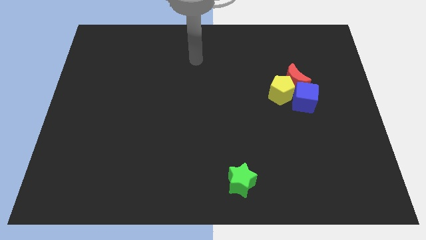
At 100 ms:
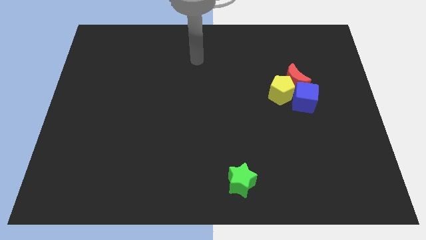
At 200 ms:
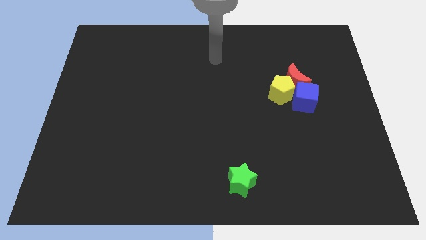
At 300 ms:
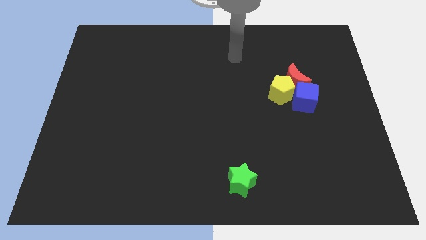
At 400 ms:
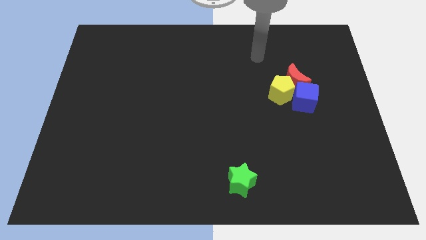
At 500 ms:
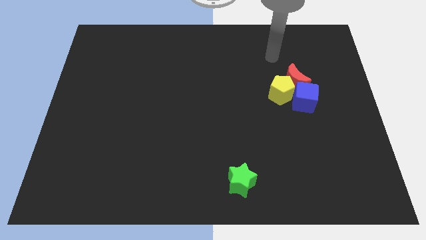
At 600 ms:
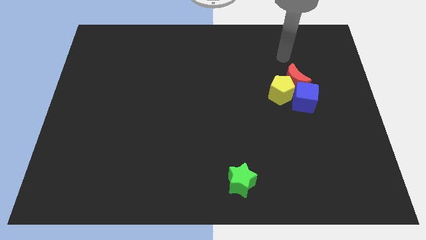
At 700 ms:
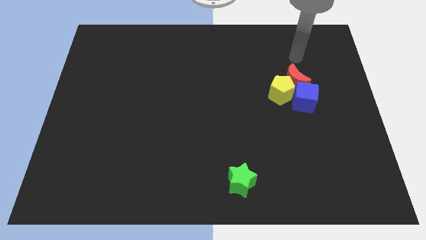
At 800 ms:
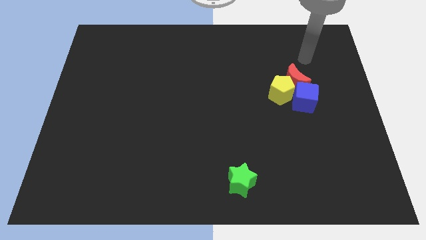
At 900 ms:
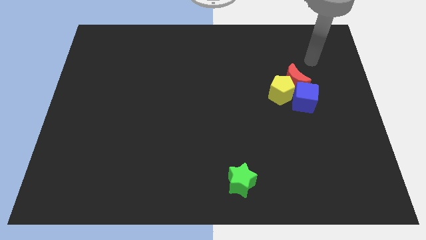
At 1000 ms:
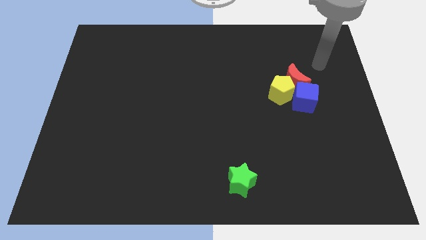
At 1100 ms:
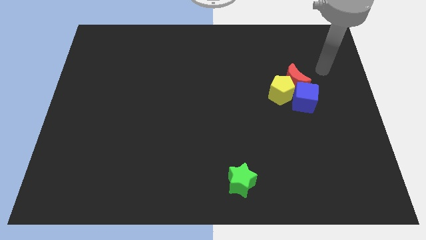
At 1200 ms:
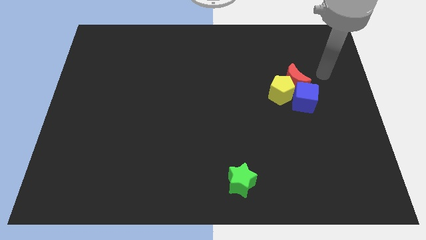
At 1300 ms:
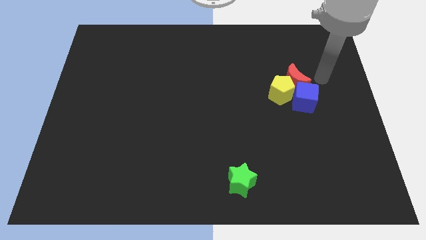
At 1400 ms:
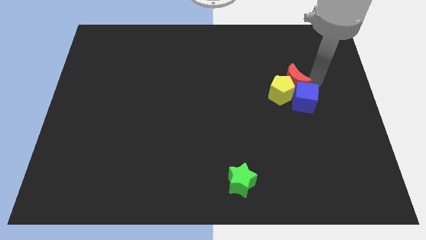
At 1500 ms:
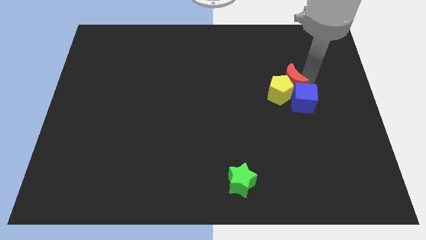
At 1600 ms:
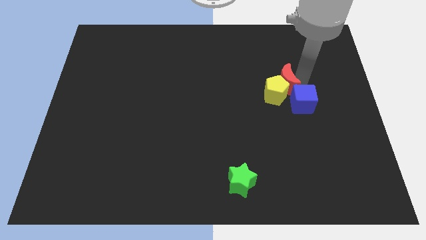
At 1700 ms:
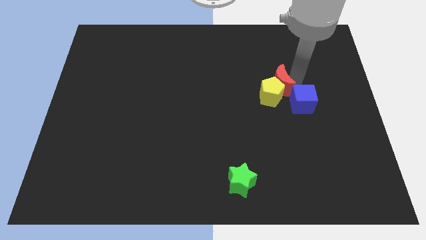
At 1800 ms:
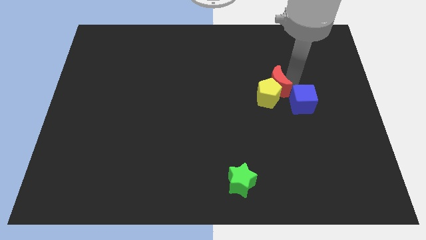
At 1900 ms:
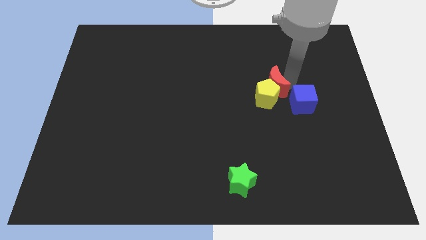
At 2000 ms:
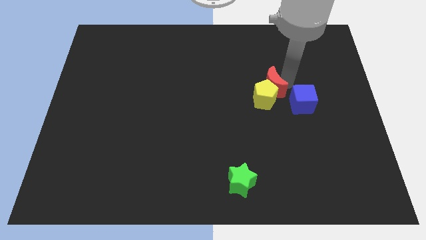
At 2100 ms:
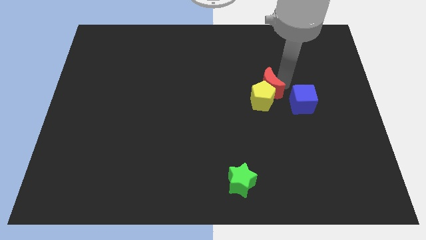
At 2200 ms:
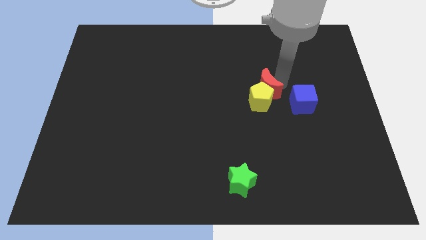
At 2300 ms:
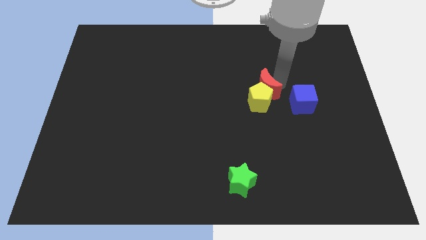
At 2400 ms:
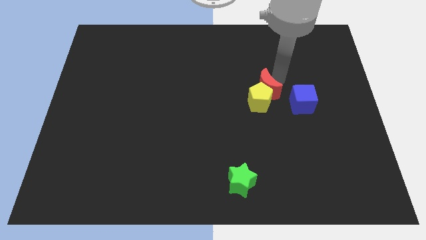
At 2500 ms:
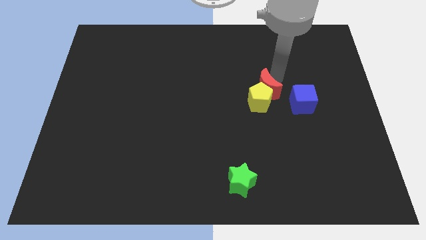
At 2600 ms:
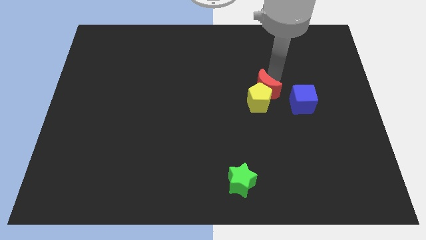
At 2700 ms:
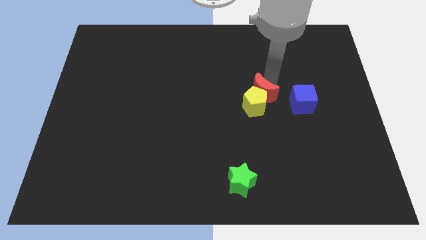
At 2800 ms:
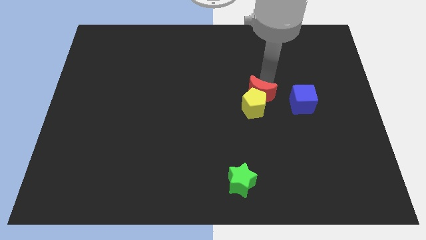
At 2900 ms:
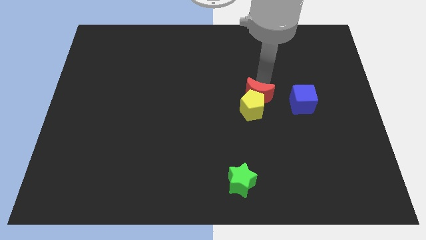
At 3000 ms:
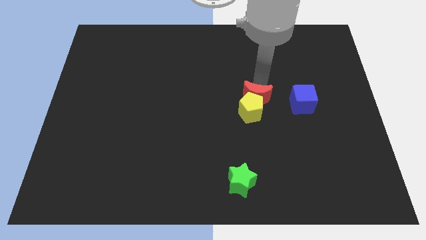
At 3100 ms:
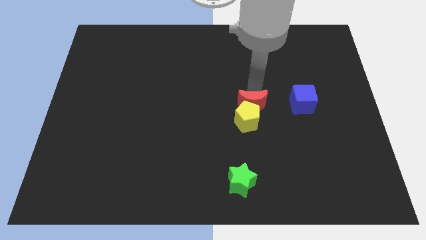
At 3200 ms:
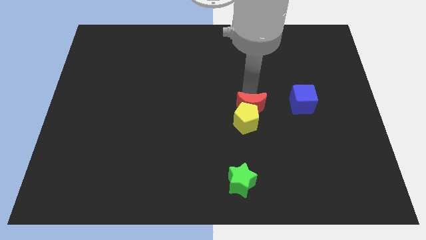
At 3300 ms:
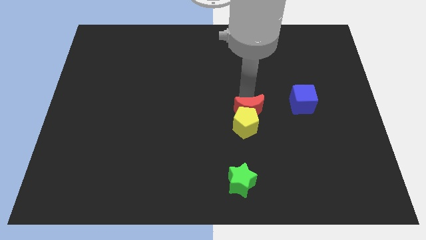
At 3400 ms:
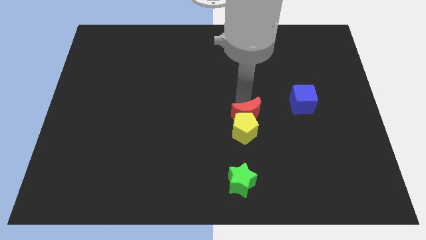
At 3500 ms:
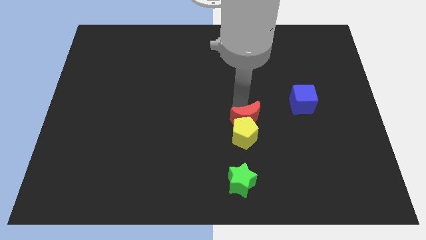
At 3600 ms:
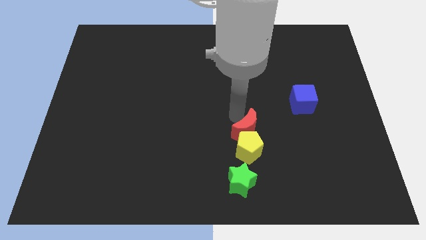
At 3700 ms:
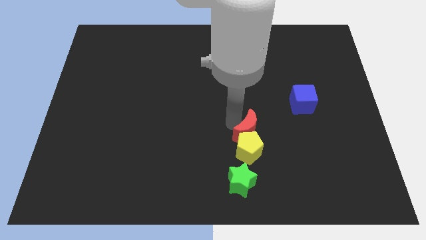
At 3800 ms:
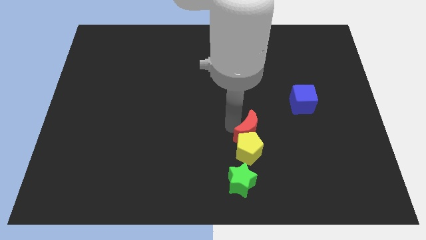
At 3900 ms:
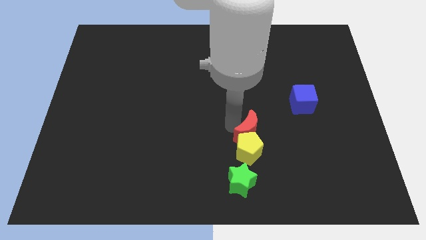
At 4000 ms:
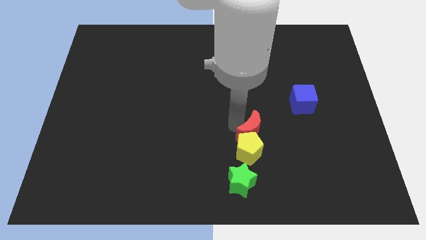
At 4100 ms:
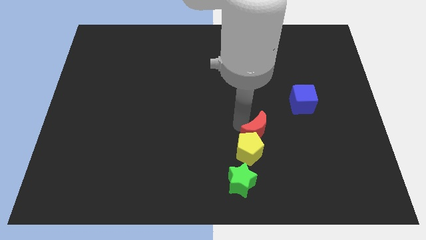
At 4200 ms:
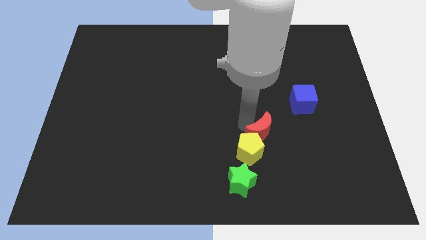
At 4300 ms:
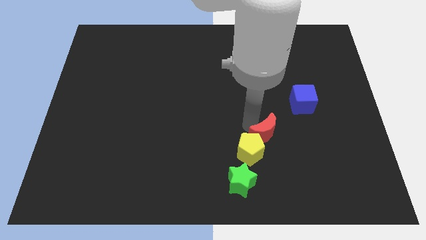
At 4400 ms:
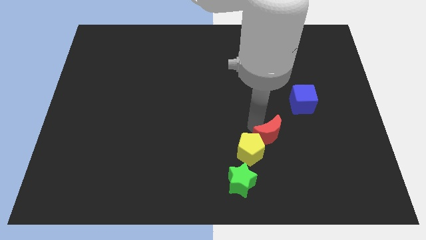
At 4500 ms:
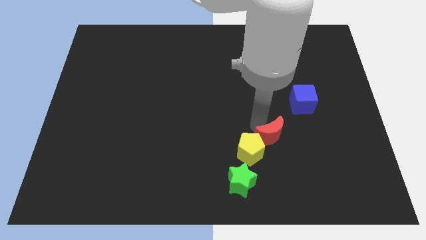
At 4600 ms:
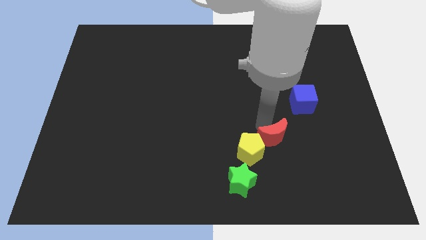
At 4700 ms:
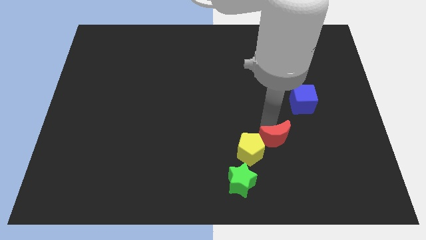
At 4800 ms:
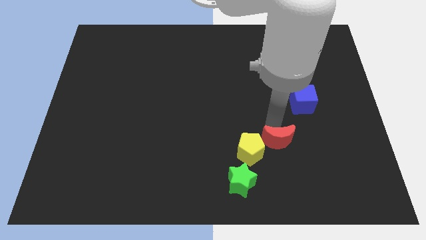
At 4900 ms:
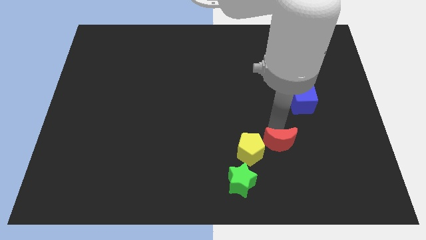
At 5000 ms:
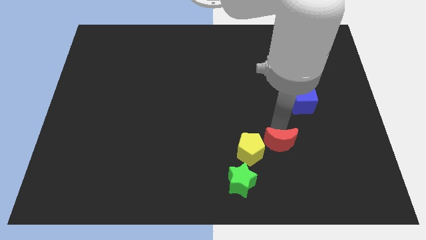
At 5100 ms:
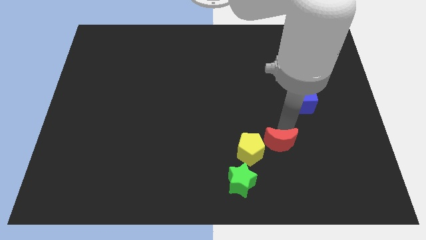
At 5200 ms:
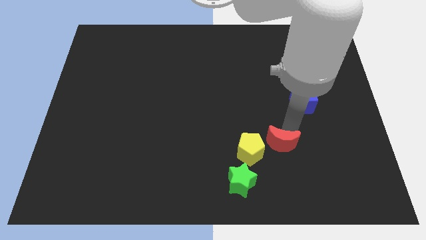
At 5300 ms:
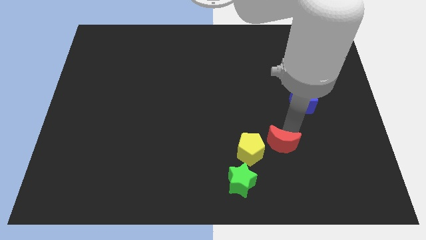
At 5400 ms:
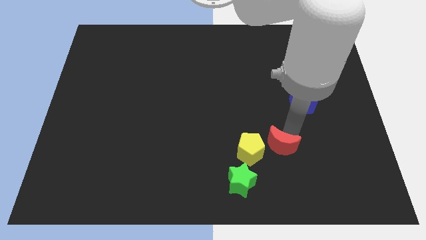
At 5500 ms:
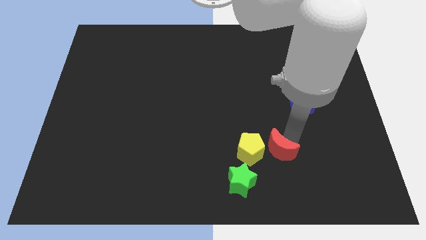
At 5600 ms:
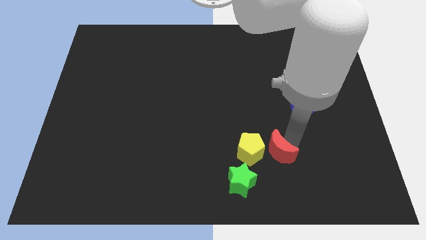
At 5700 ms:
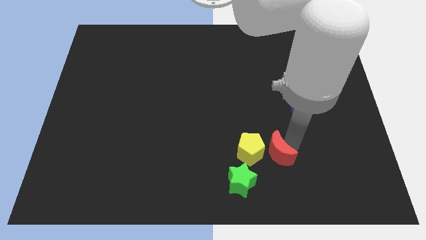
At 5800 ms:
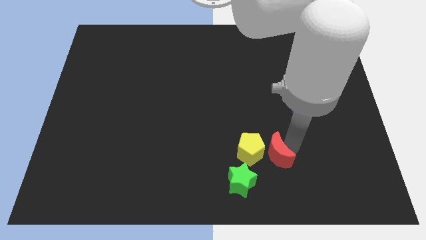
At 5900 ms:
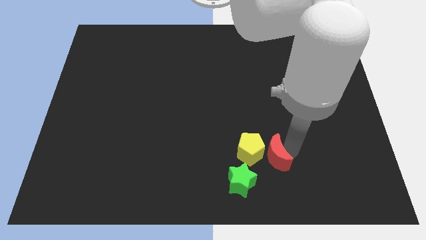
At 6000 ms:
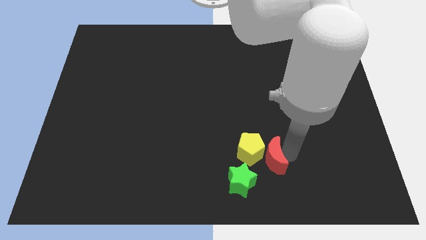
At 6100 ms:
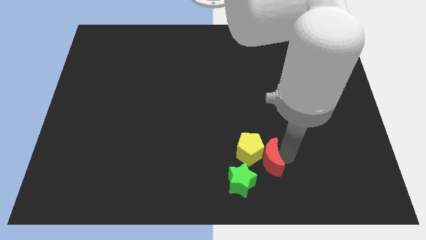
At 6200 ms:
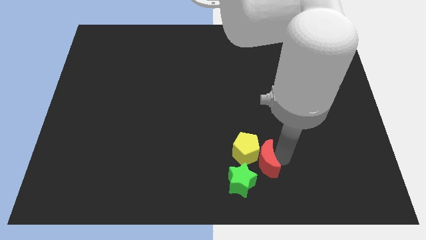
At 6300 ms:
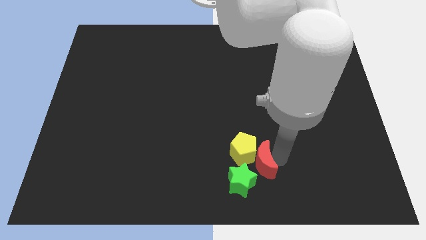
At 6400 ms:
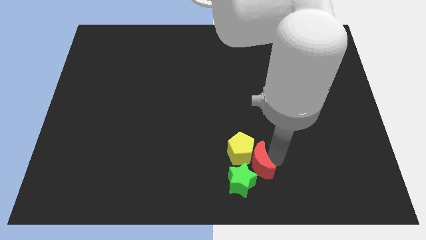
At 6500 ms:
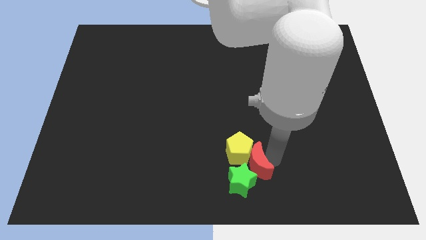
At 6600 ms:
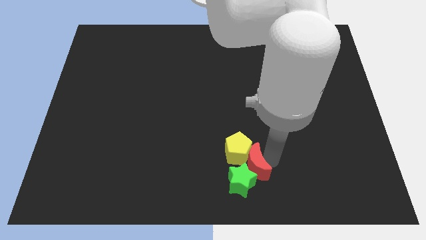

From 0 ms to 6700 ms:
move the red moon to the green block

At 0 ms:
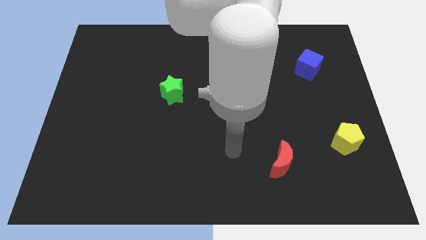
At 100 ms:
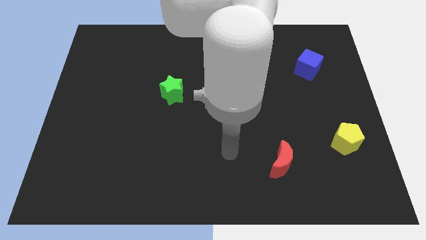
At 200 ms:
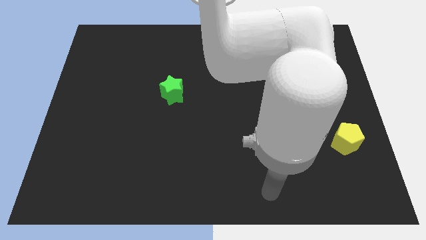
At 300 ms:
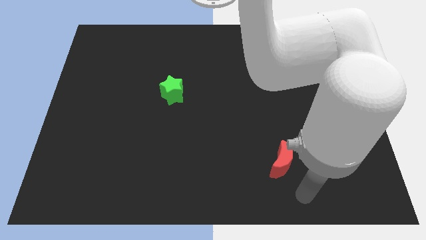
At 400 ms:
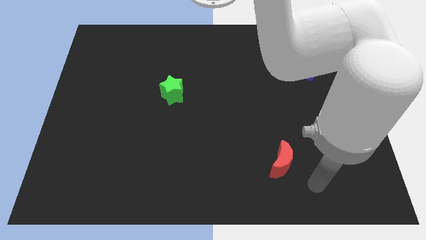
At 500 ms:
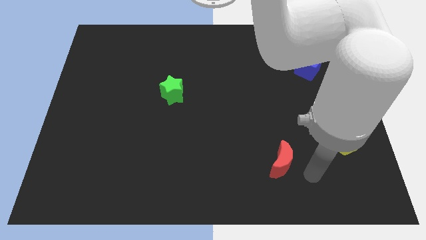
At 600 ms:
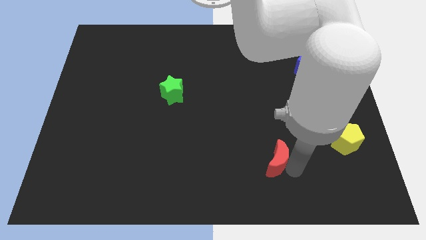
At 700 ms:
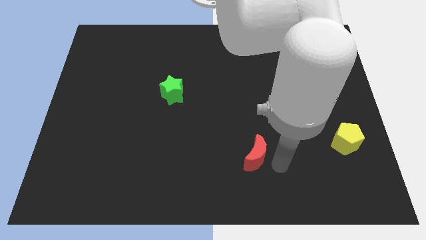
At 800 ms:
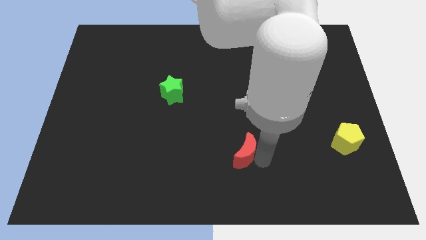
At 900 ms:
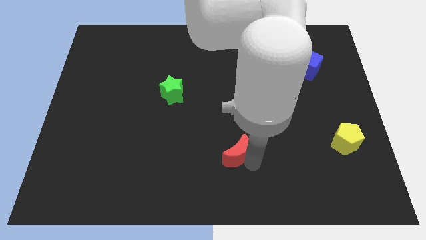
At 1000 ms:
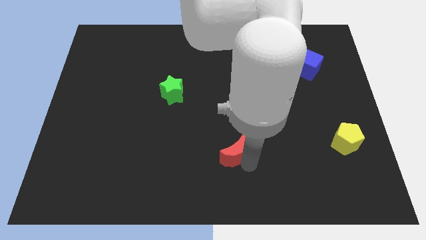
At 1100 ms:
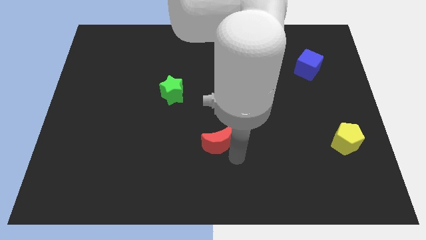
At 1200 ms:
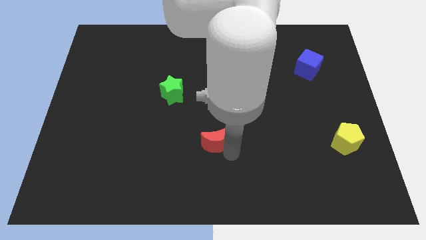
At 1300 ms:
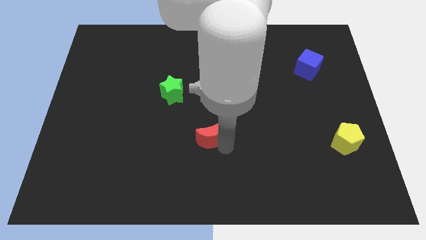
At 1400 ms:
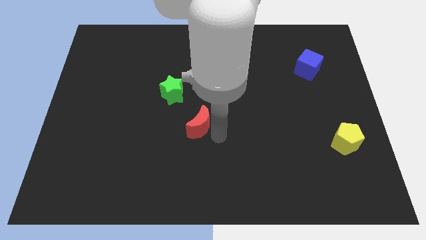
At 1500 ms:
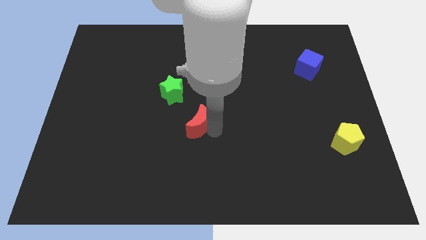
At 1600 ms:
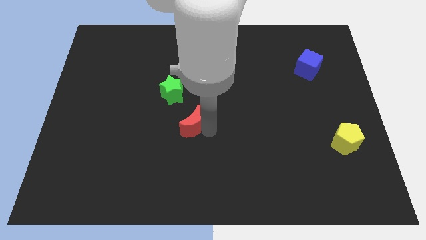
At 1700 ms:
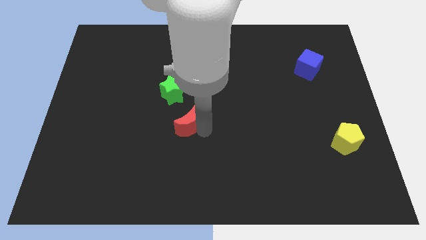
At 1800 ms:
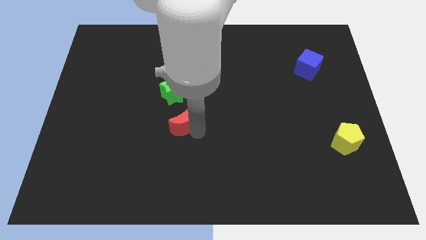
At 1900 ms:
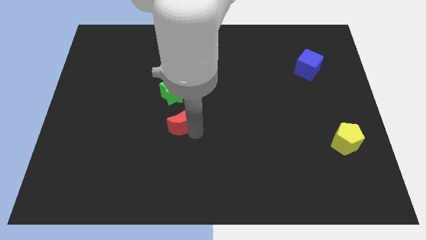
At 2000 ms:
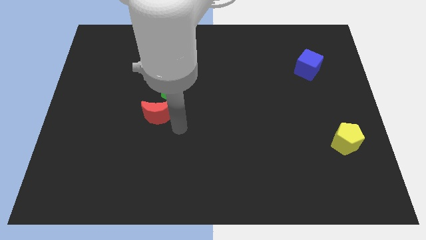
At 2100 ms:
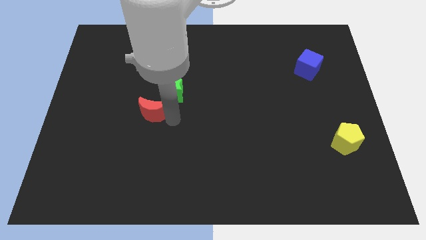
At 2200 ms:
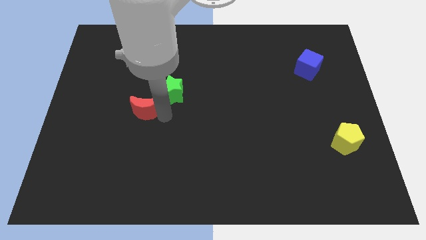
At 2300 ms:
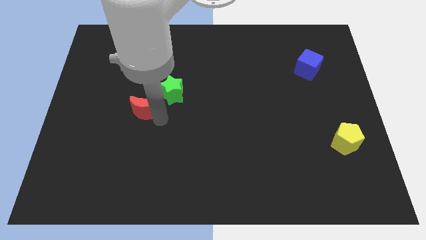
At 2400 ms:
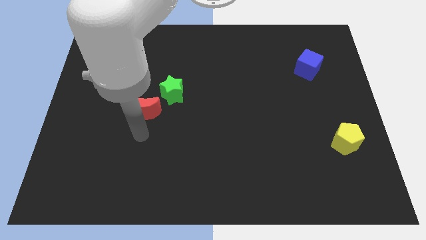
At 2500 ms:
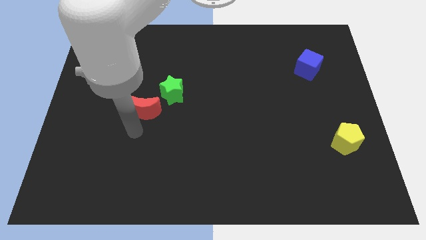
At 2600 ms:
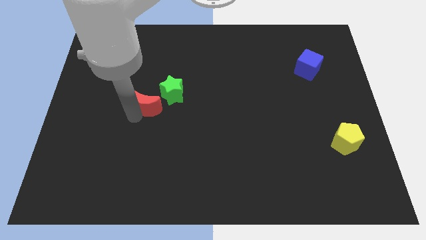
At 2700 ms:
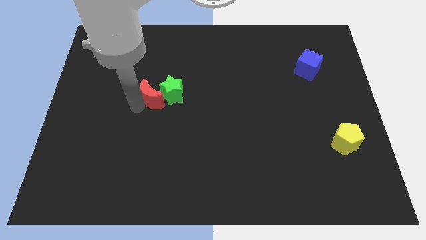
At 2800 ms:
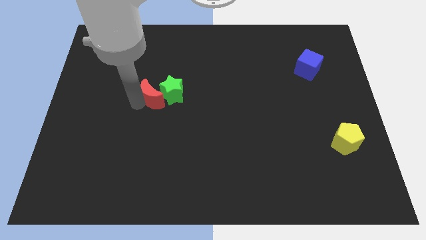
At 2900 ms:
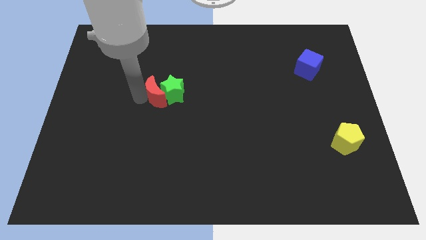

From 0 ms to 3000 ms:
put the red moon next to the star
